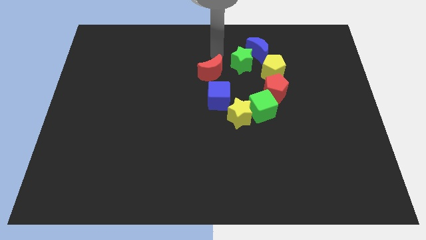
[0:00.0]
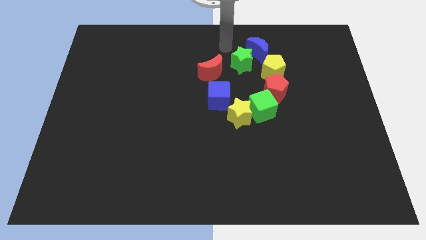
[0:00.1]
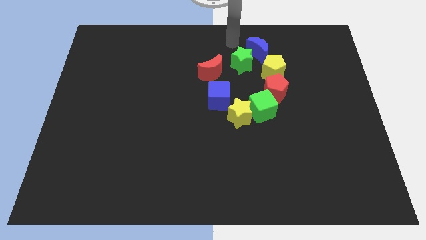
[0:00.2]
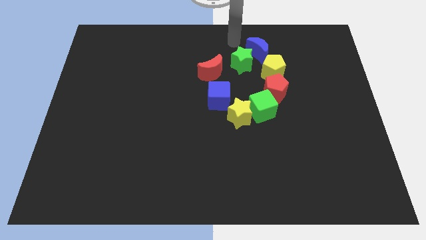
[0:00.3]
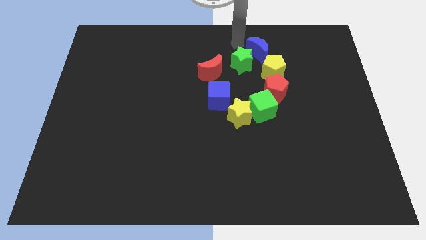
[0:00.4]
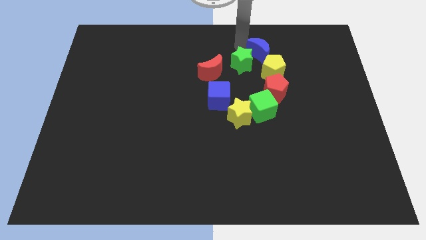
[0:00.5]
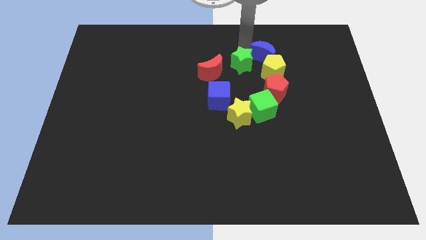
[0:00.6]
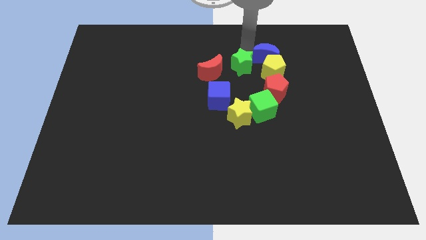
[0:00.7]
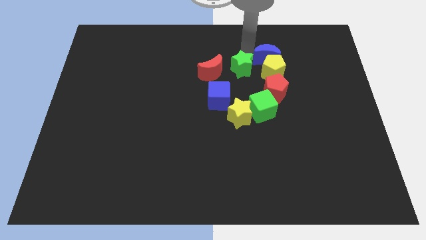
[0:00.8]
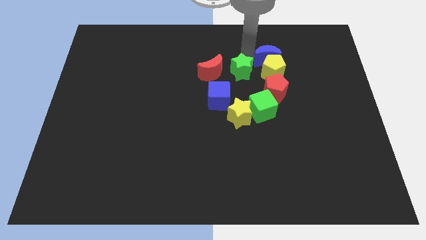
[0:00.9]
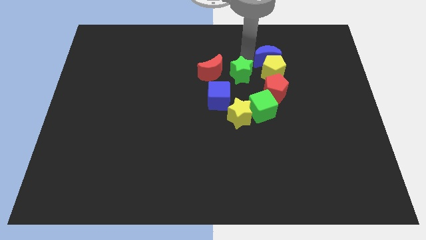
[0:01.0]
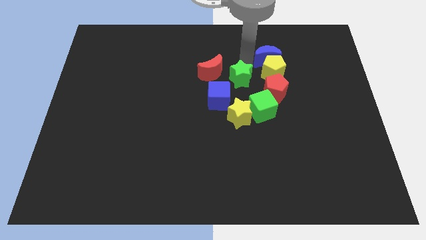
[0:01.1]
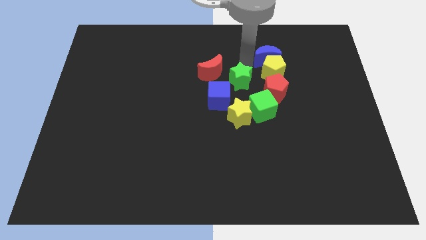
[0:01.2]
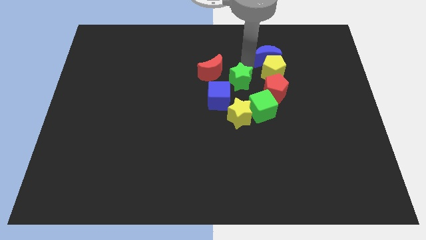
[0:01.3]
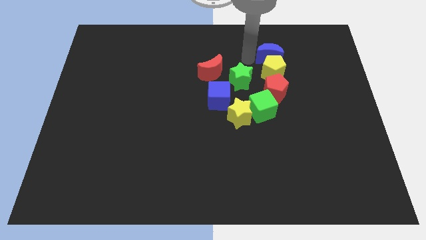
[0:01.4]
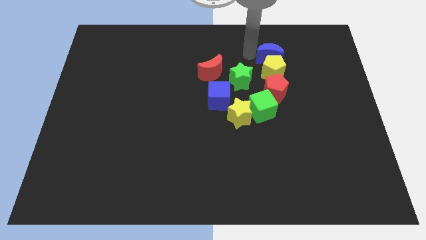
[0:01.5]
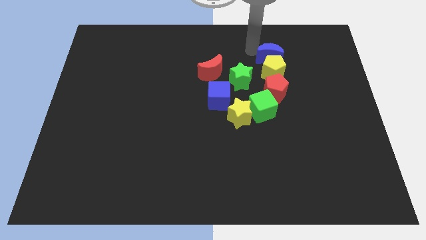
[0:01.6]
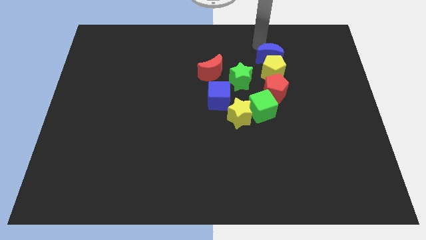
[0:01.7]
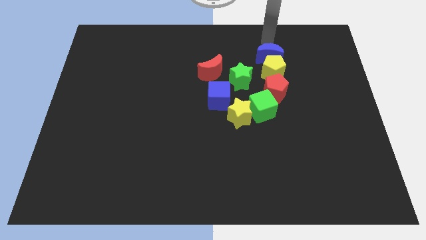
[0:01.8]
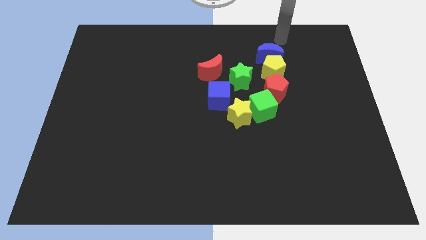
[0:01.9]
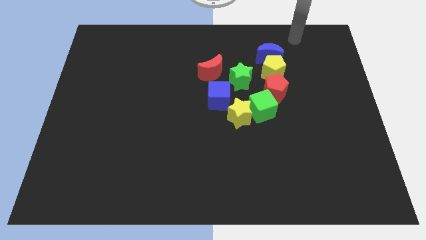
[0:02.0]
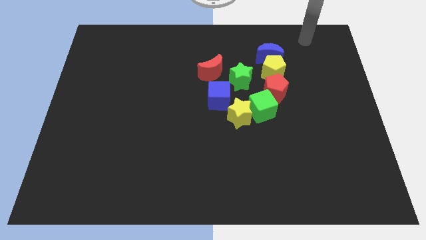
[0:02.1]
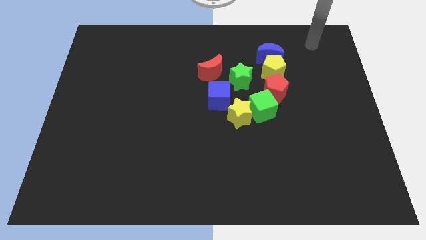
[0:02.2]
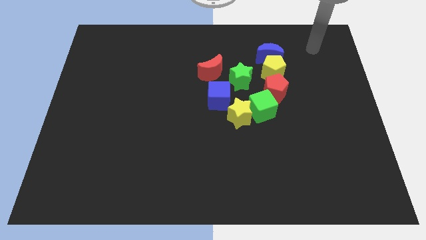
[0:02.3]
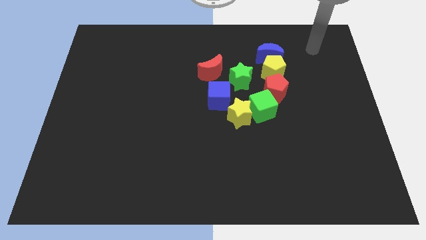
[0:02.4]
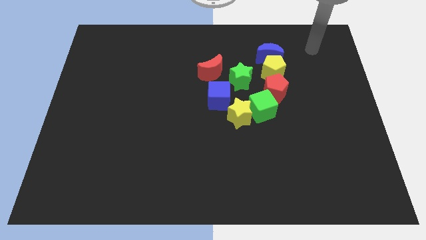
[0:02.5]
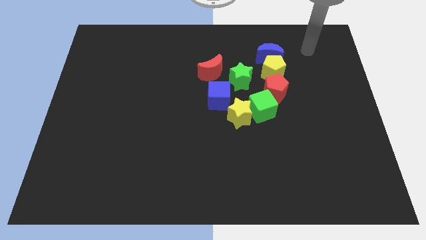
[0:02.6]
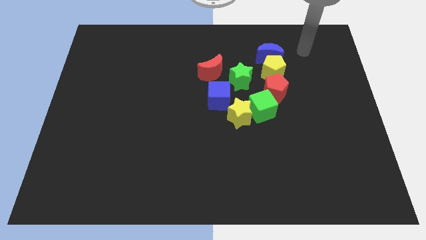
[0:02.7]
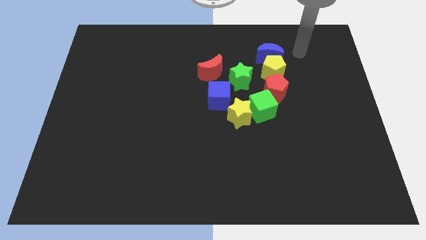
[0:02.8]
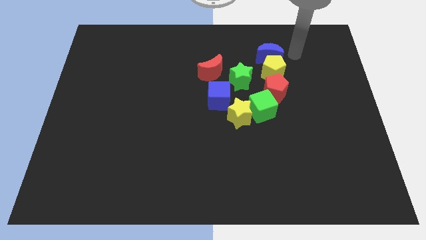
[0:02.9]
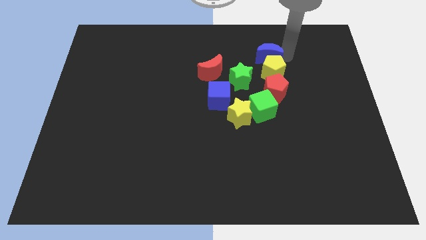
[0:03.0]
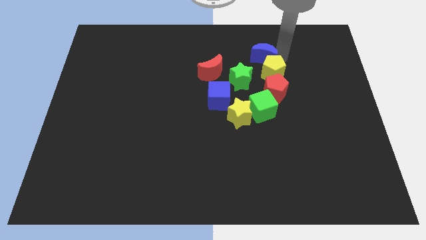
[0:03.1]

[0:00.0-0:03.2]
place the arm right to the blue moon

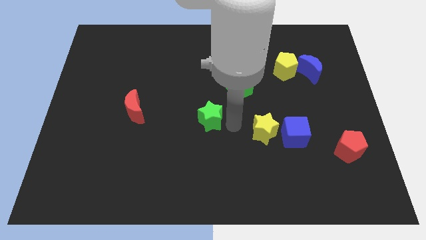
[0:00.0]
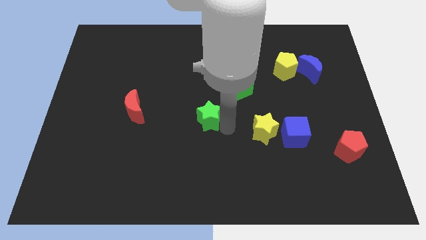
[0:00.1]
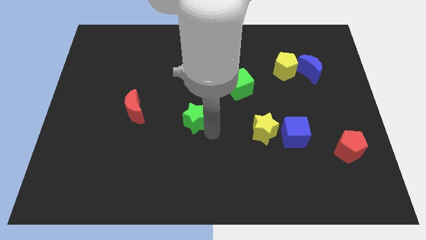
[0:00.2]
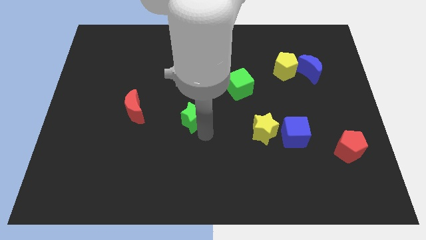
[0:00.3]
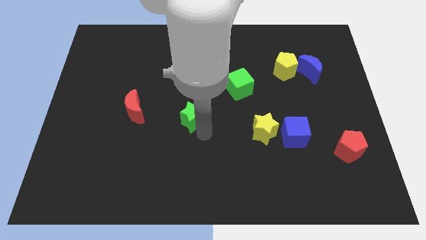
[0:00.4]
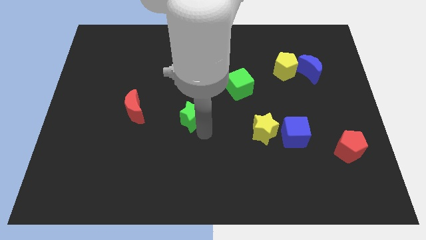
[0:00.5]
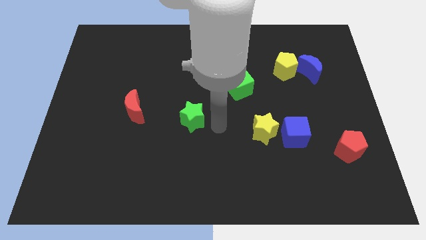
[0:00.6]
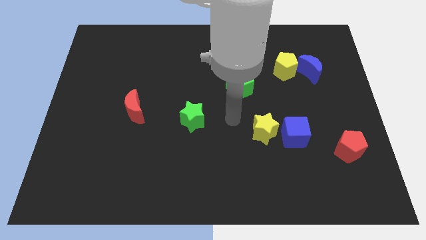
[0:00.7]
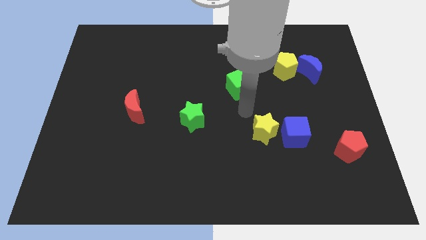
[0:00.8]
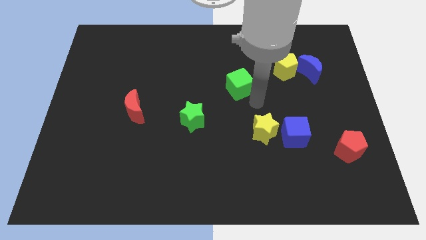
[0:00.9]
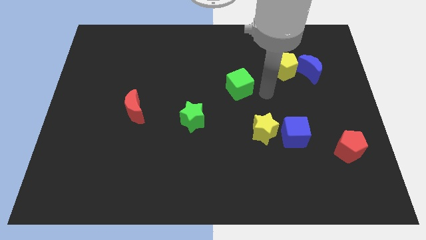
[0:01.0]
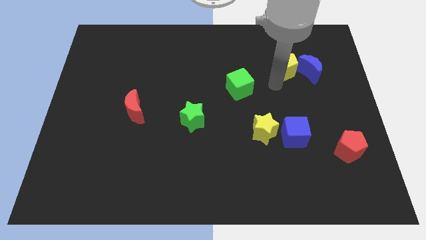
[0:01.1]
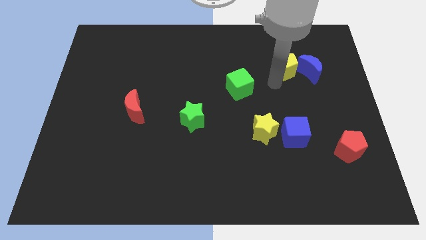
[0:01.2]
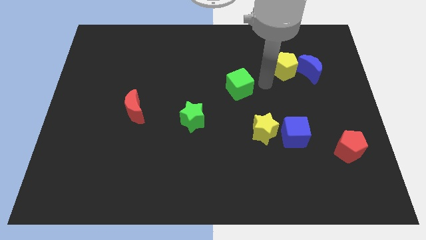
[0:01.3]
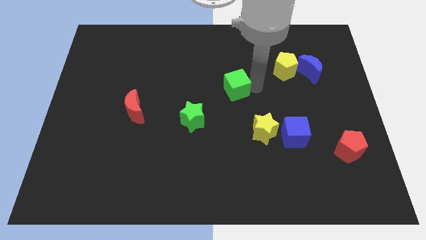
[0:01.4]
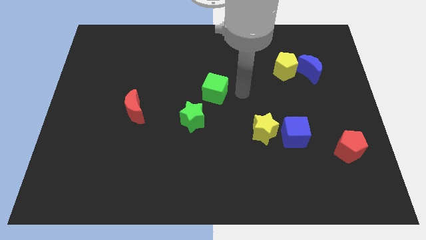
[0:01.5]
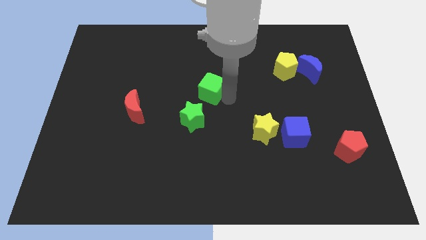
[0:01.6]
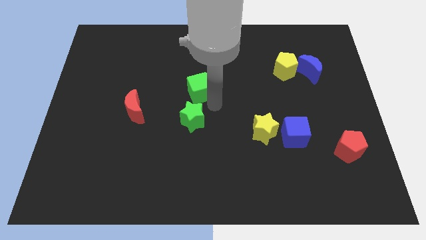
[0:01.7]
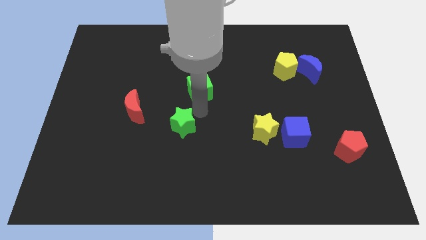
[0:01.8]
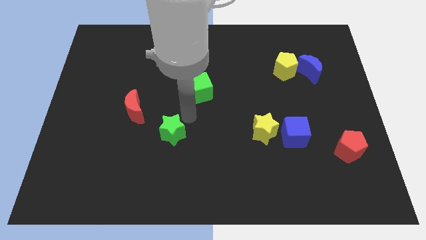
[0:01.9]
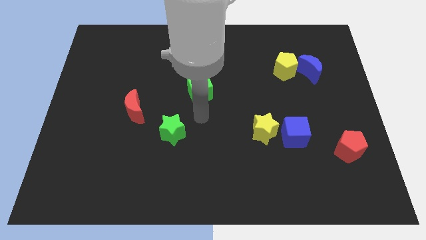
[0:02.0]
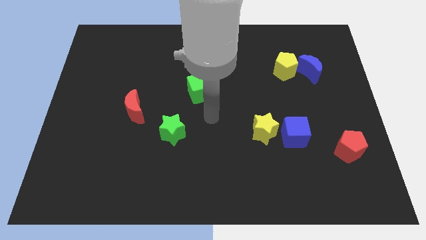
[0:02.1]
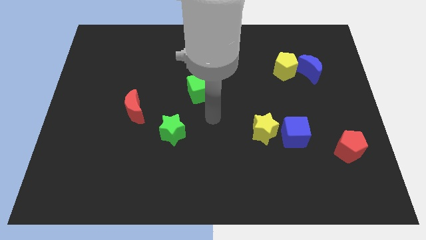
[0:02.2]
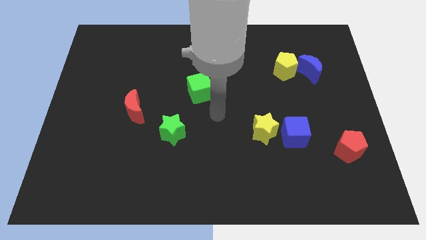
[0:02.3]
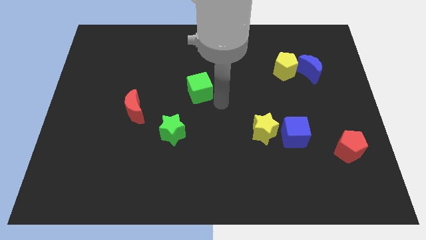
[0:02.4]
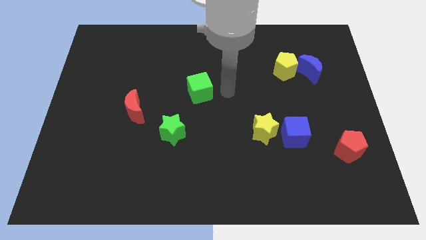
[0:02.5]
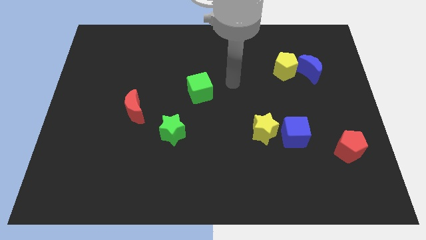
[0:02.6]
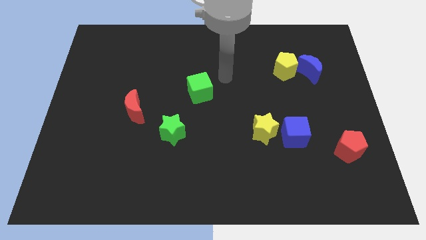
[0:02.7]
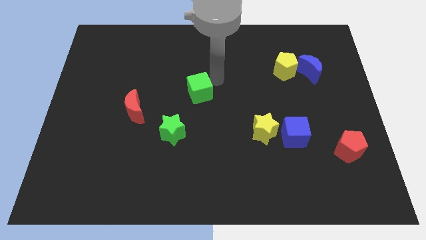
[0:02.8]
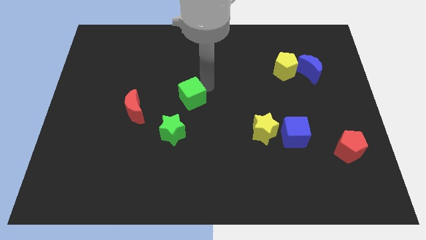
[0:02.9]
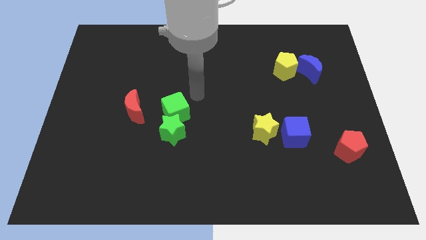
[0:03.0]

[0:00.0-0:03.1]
place the green star green cube towards left center

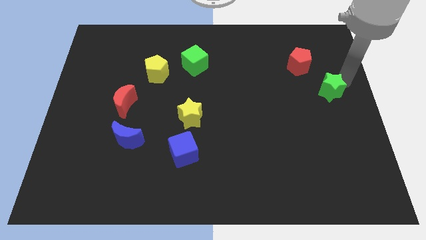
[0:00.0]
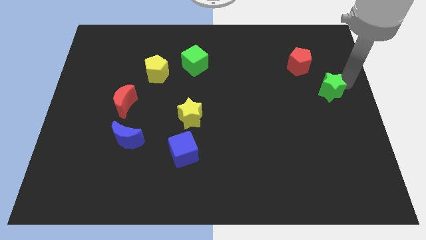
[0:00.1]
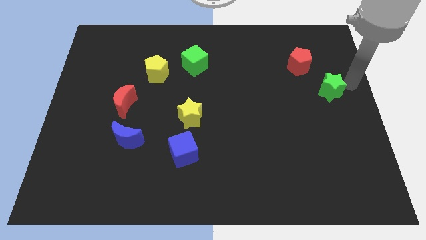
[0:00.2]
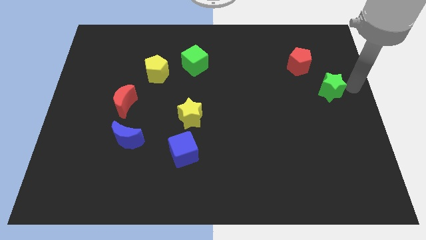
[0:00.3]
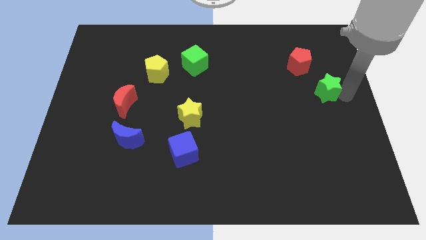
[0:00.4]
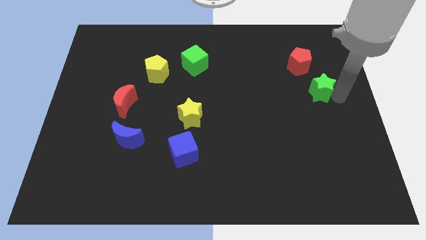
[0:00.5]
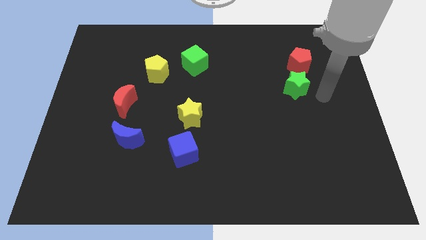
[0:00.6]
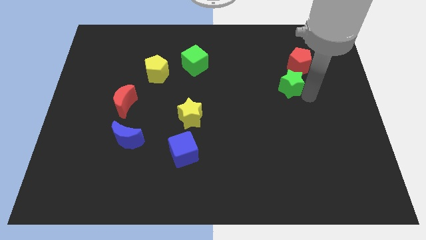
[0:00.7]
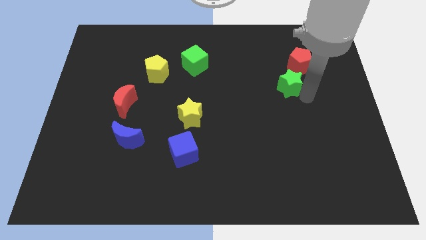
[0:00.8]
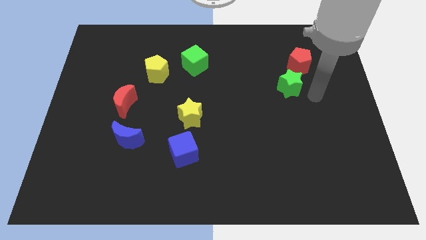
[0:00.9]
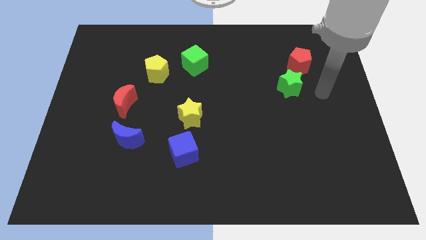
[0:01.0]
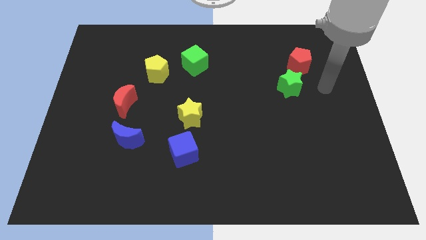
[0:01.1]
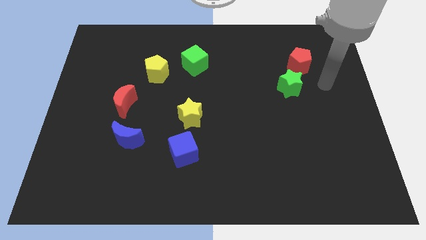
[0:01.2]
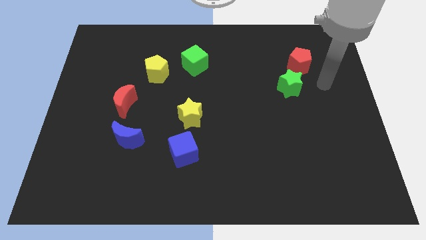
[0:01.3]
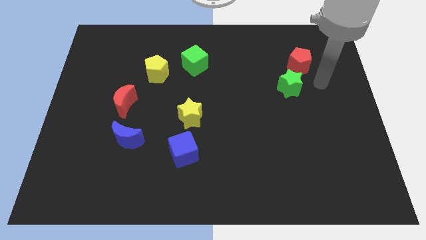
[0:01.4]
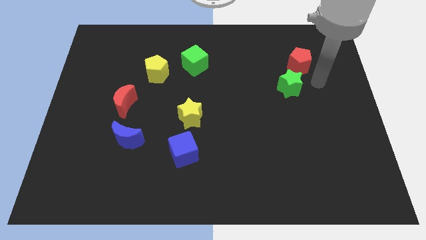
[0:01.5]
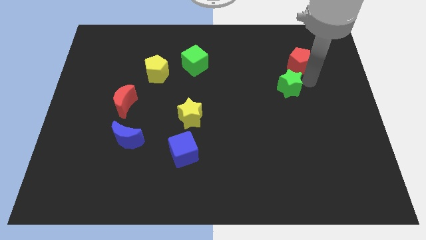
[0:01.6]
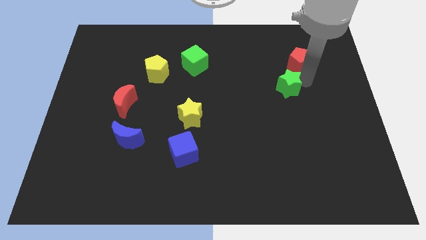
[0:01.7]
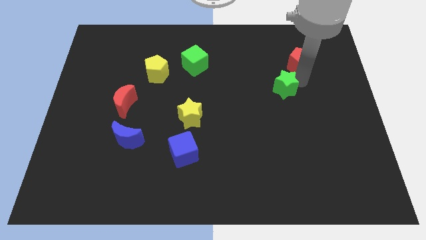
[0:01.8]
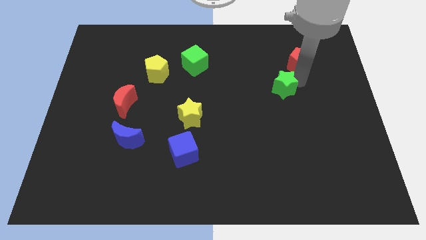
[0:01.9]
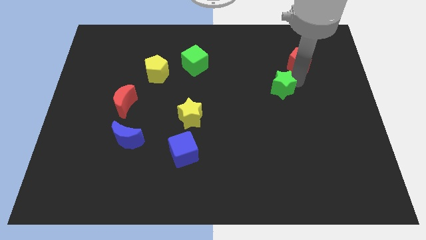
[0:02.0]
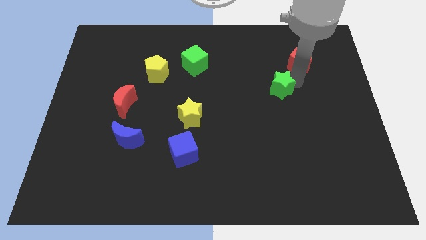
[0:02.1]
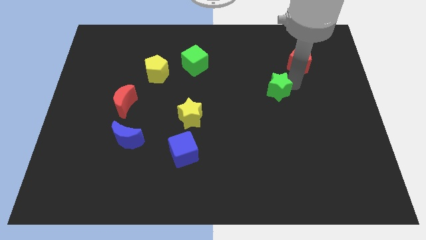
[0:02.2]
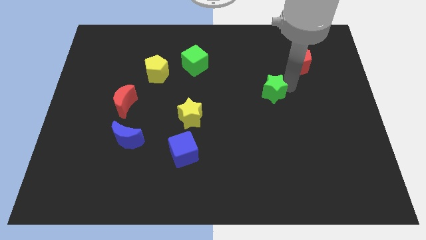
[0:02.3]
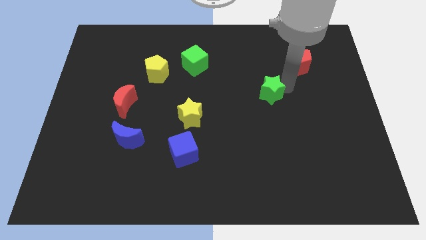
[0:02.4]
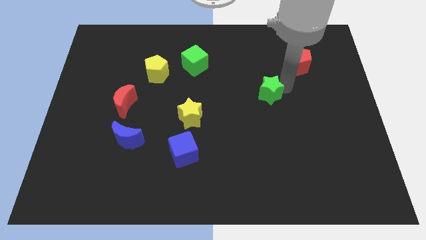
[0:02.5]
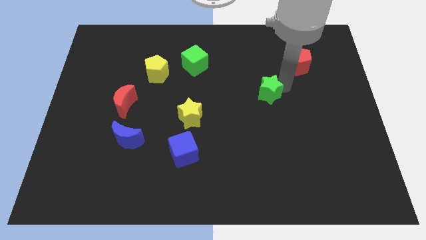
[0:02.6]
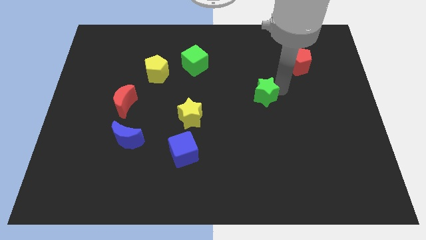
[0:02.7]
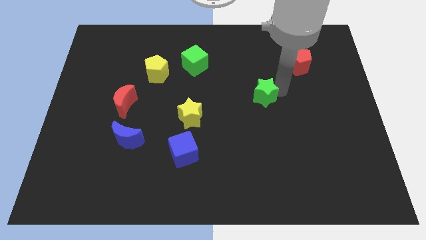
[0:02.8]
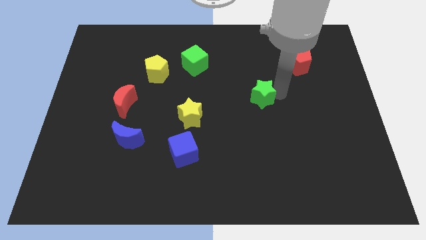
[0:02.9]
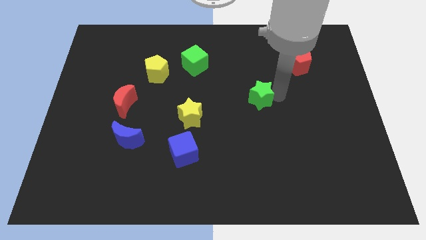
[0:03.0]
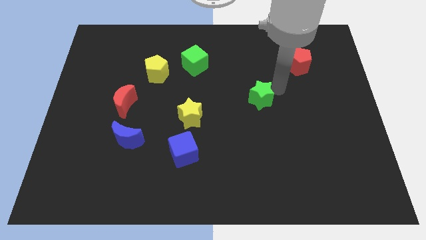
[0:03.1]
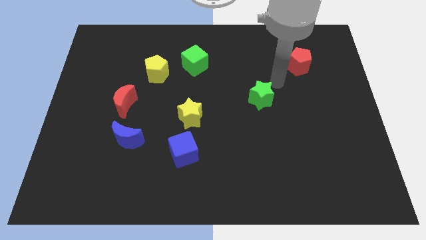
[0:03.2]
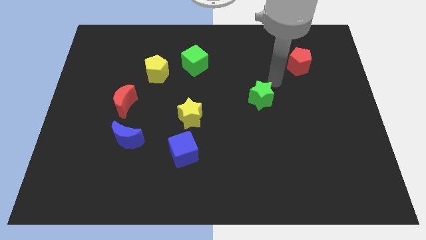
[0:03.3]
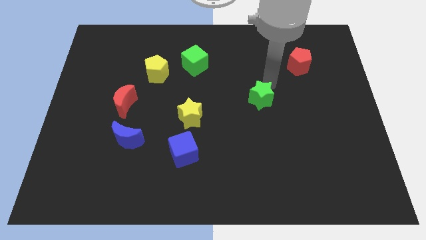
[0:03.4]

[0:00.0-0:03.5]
push the green star to the bottom left side of the red pentagon
